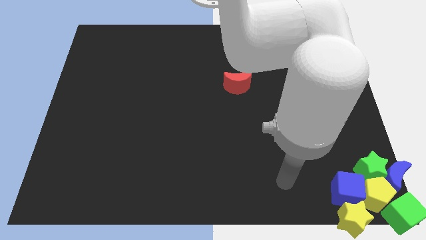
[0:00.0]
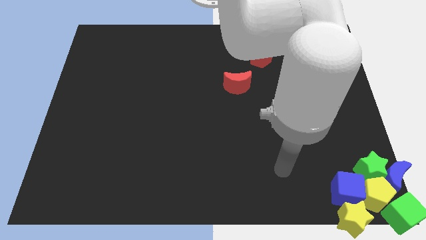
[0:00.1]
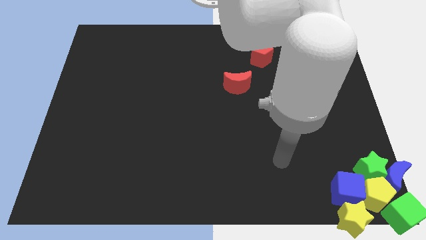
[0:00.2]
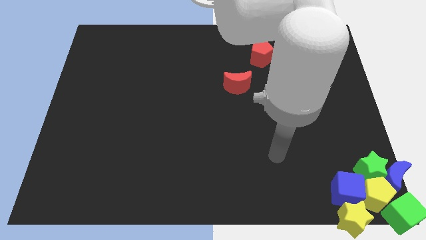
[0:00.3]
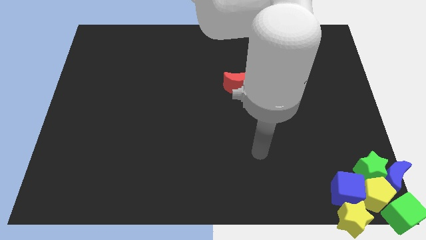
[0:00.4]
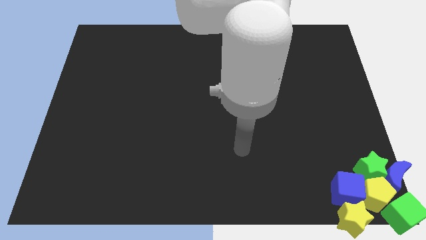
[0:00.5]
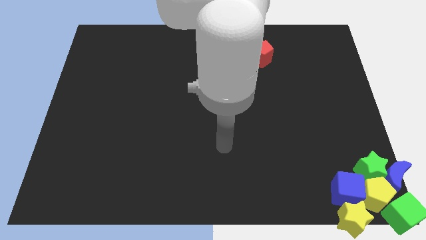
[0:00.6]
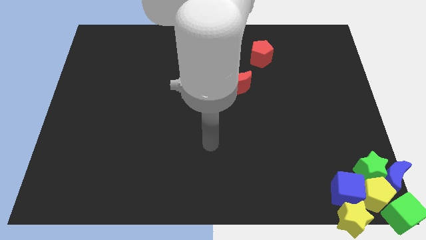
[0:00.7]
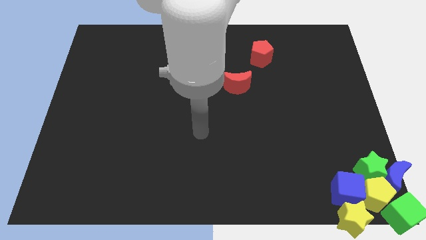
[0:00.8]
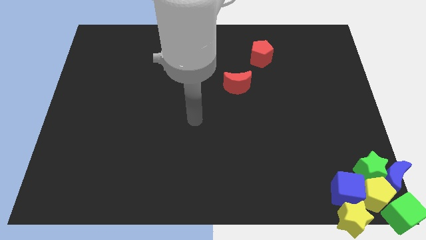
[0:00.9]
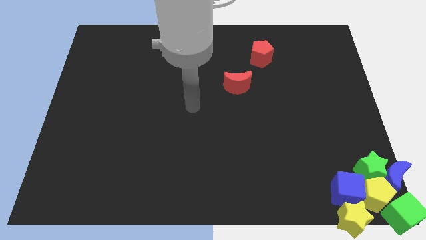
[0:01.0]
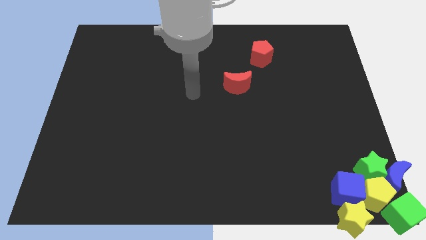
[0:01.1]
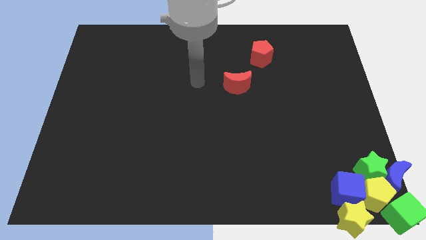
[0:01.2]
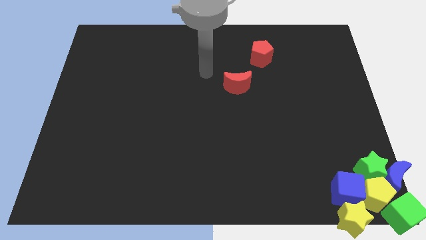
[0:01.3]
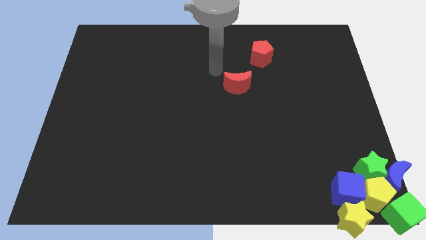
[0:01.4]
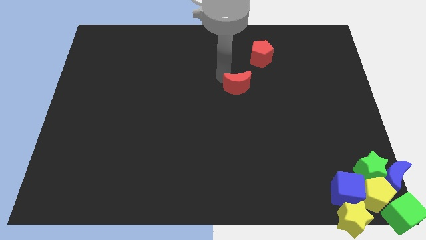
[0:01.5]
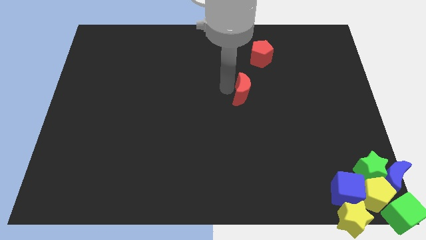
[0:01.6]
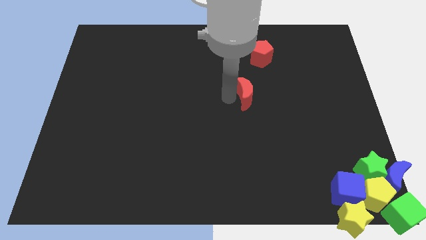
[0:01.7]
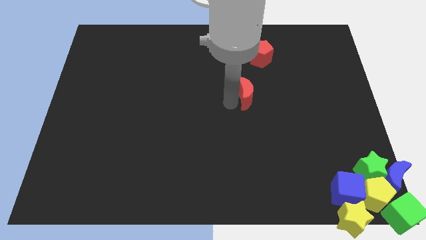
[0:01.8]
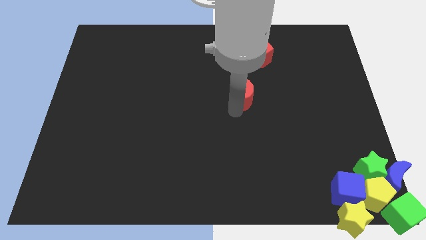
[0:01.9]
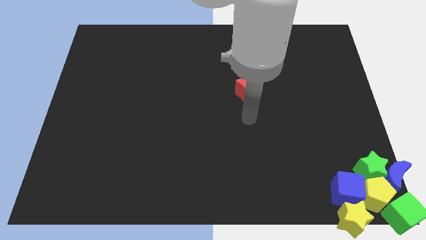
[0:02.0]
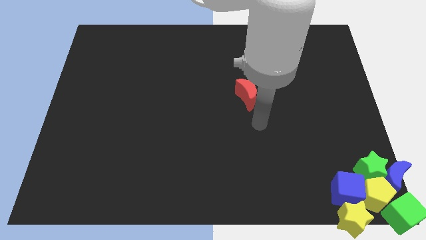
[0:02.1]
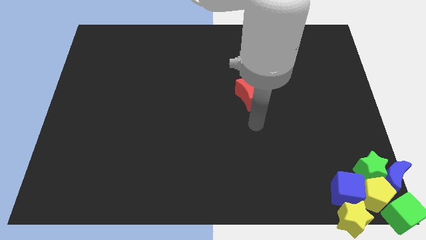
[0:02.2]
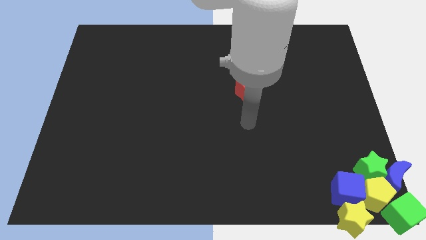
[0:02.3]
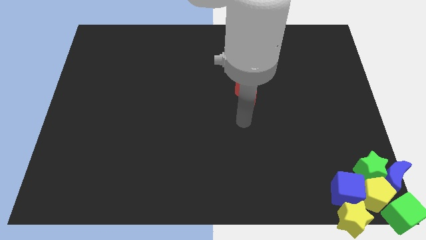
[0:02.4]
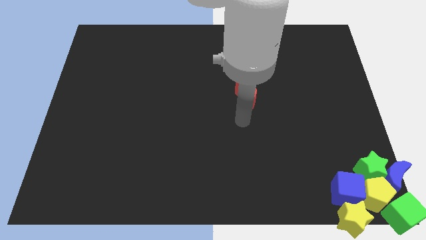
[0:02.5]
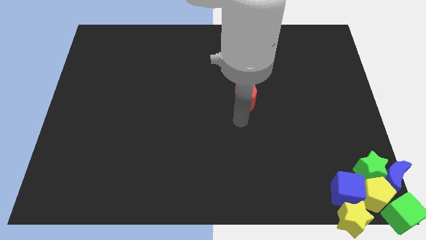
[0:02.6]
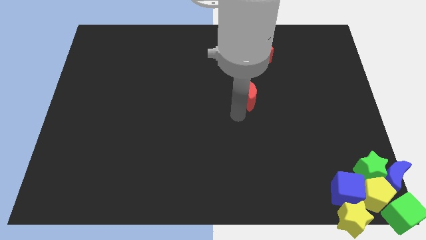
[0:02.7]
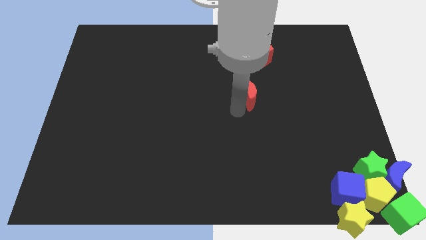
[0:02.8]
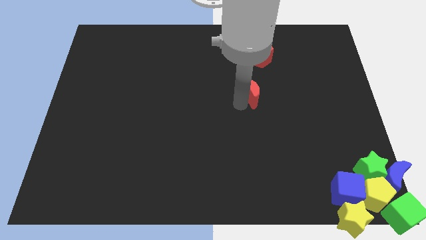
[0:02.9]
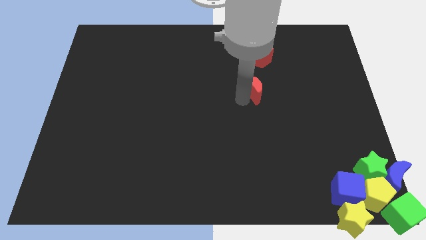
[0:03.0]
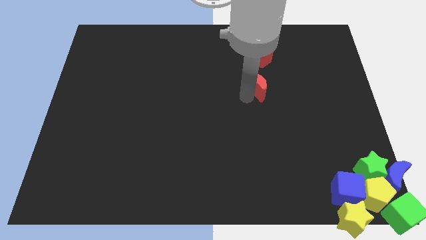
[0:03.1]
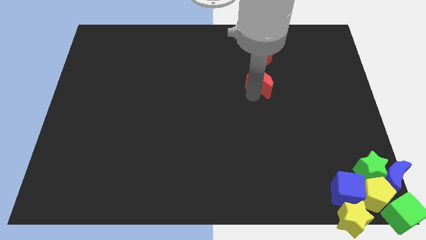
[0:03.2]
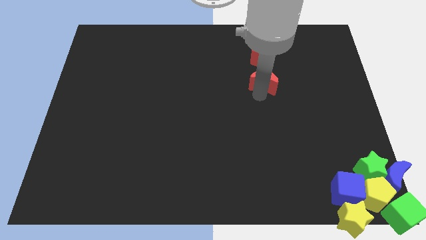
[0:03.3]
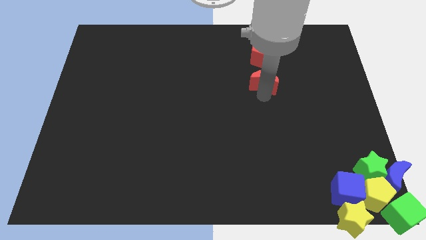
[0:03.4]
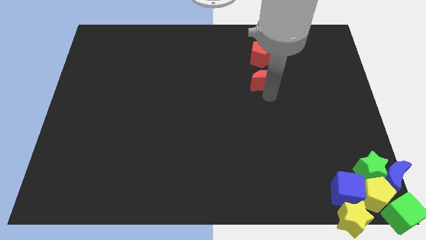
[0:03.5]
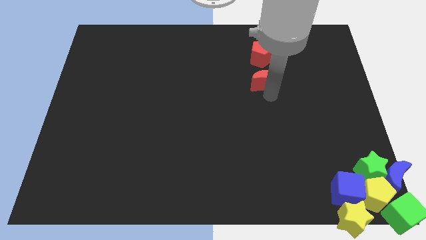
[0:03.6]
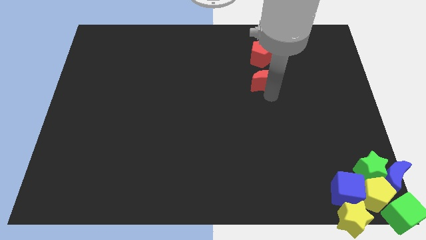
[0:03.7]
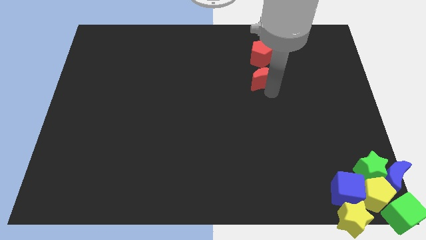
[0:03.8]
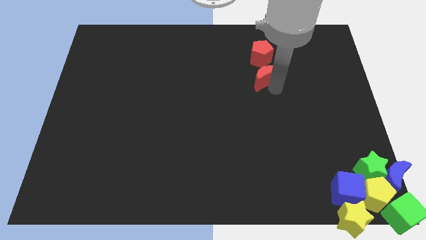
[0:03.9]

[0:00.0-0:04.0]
place the red crescent below the red pentagon

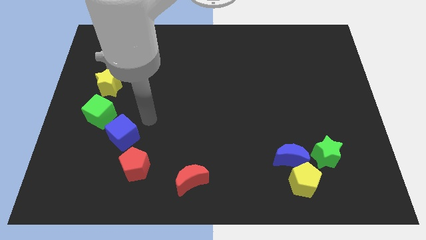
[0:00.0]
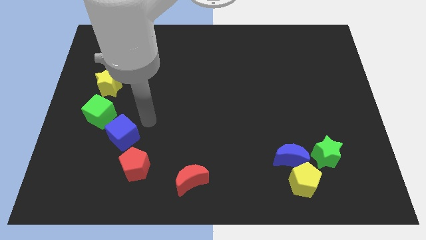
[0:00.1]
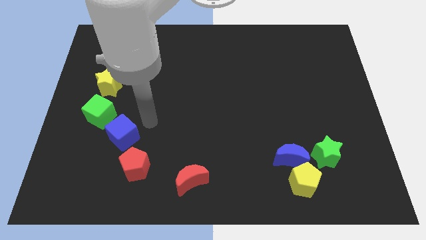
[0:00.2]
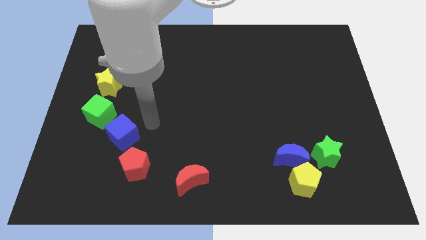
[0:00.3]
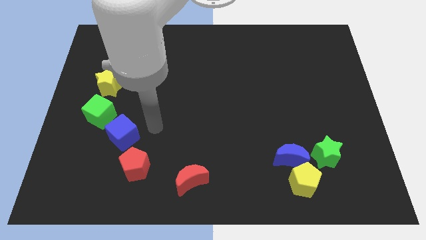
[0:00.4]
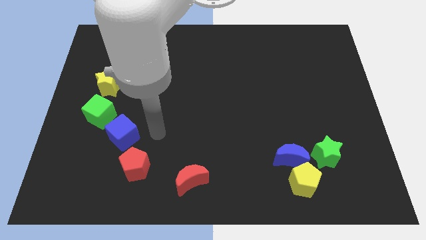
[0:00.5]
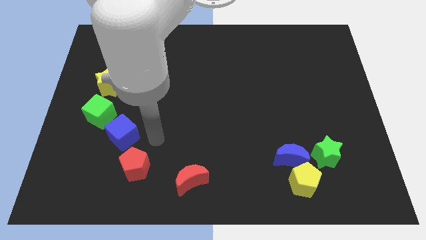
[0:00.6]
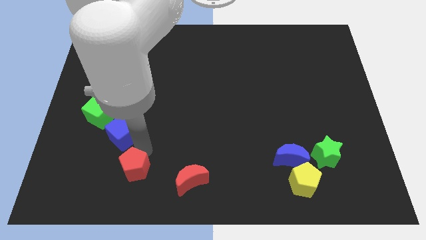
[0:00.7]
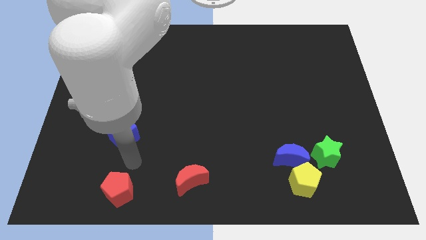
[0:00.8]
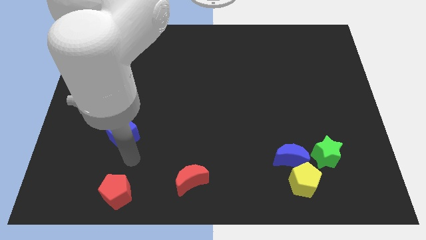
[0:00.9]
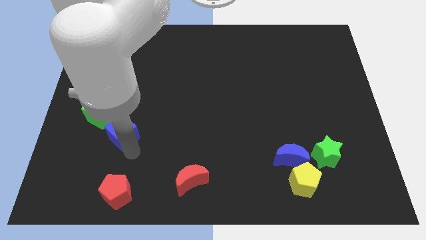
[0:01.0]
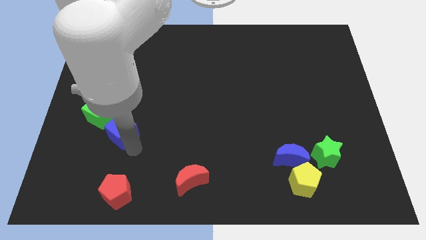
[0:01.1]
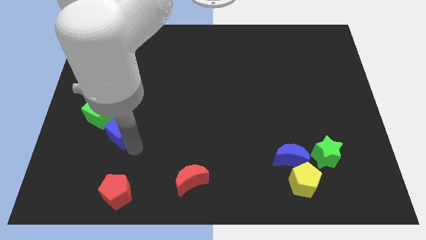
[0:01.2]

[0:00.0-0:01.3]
push the red pentagon towards the bottom of the board

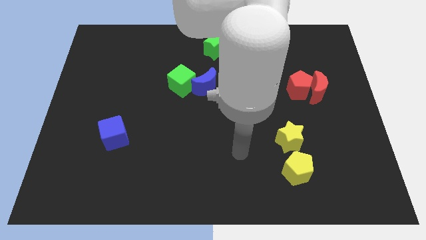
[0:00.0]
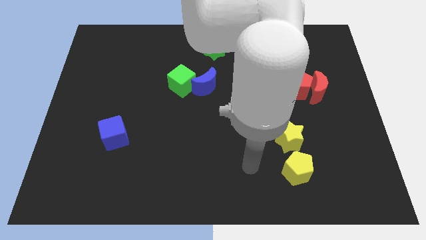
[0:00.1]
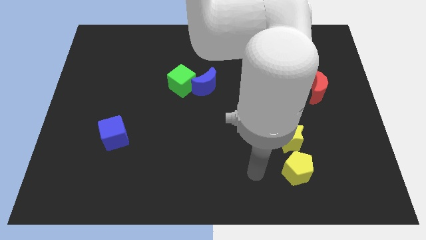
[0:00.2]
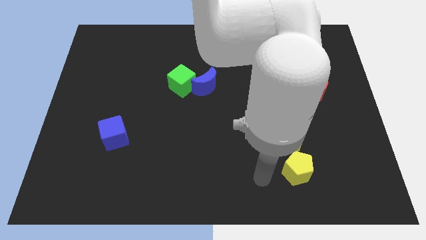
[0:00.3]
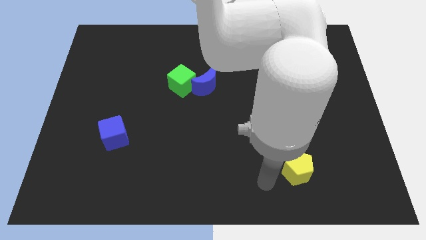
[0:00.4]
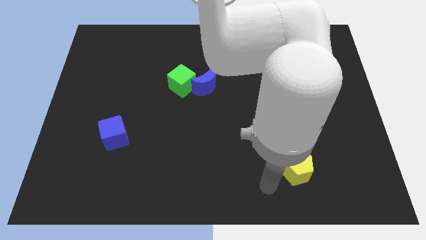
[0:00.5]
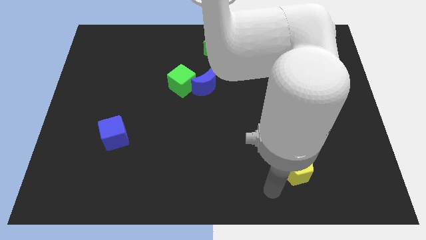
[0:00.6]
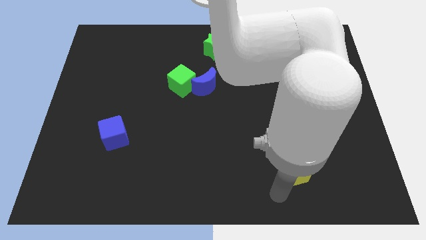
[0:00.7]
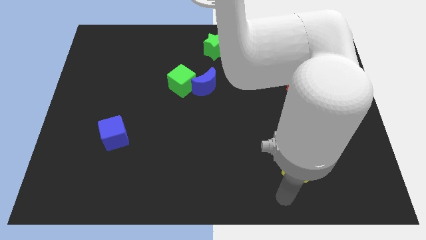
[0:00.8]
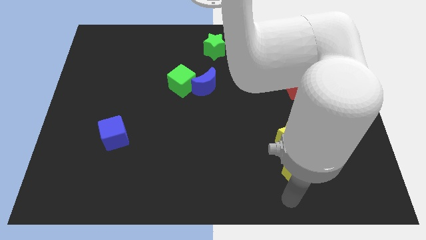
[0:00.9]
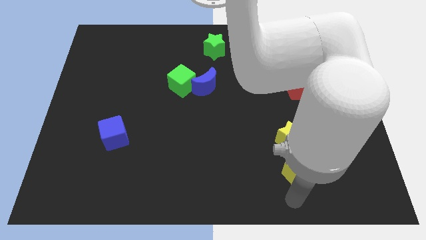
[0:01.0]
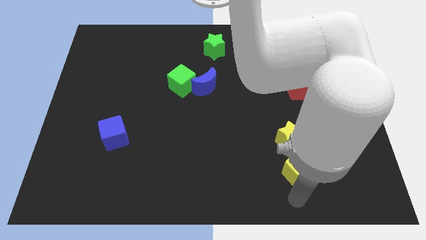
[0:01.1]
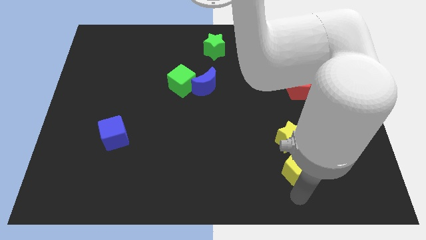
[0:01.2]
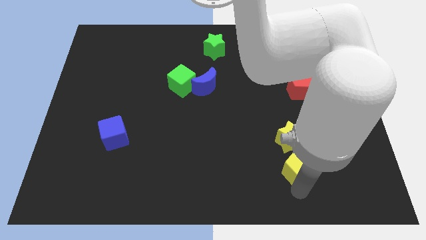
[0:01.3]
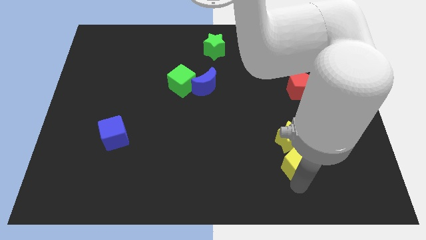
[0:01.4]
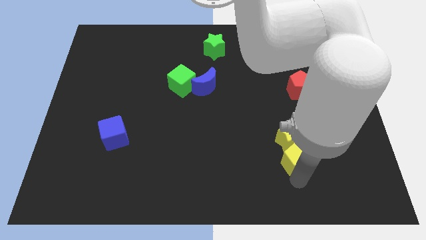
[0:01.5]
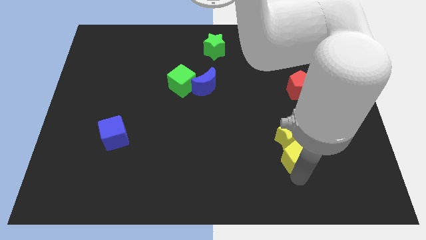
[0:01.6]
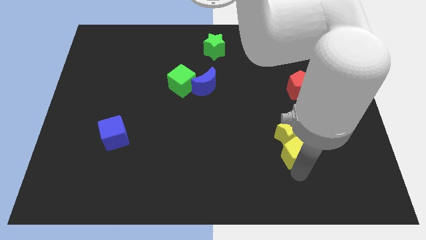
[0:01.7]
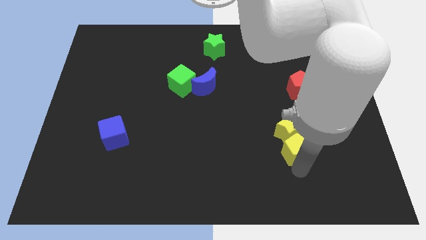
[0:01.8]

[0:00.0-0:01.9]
push the yellow pentagon into the yellow star

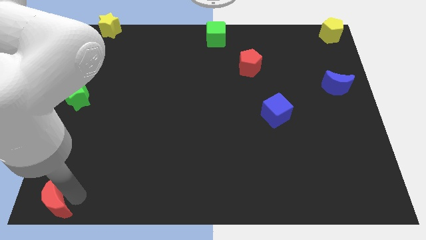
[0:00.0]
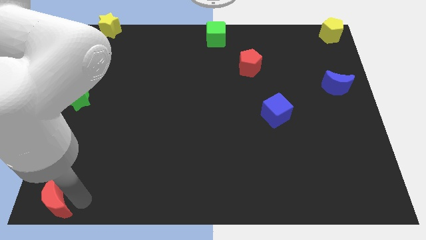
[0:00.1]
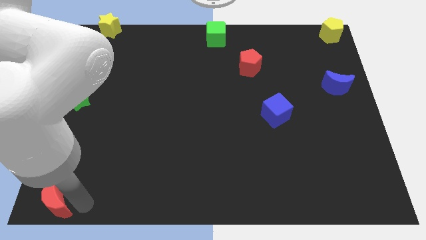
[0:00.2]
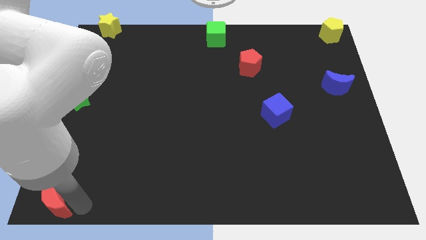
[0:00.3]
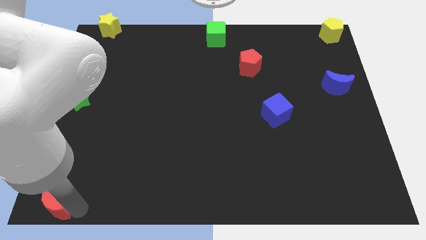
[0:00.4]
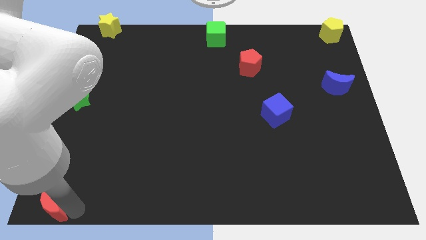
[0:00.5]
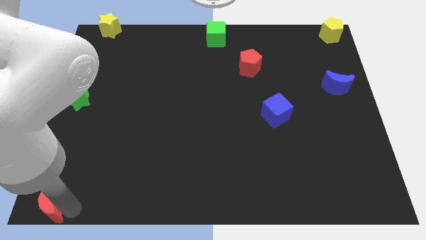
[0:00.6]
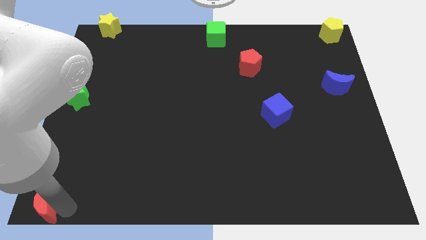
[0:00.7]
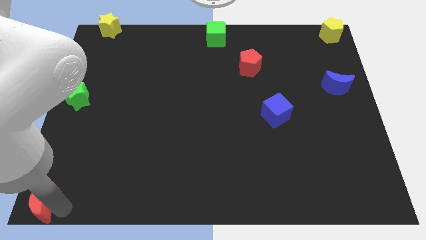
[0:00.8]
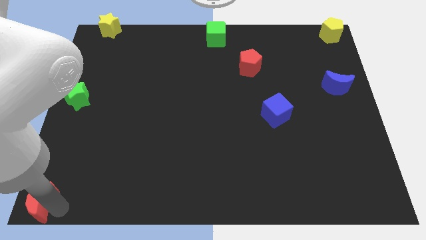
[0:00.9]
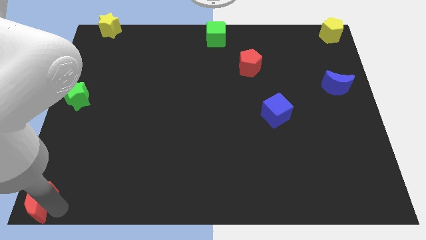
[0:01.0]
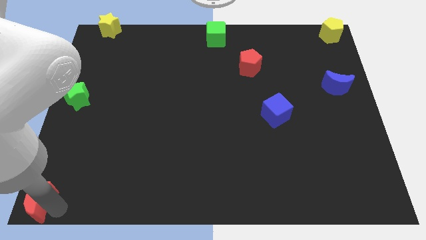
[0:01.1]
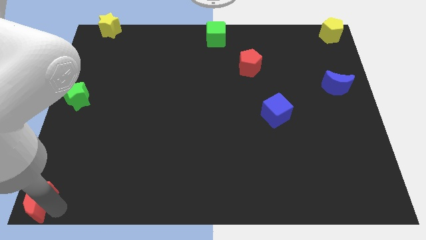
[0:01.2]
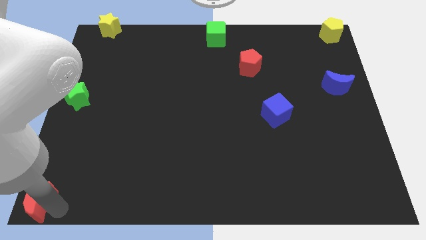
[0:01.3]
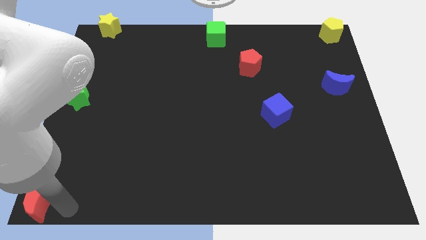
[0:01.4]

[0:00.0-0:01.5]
move the red moon towards the bottom left side of the board

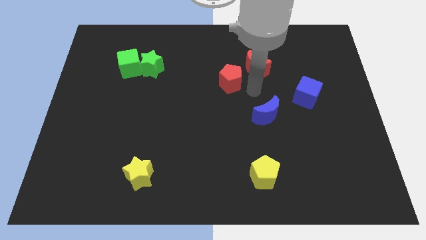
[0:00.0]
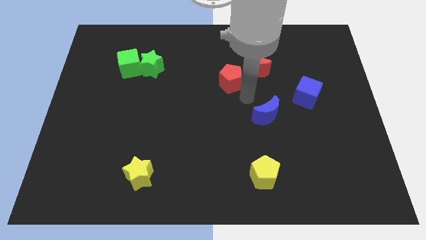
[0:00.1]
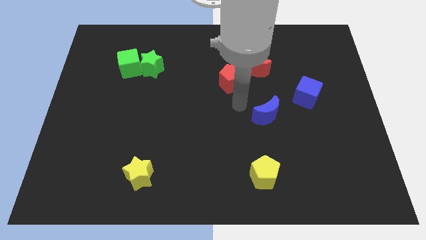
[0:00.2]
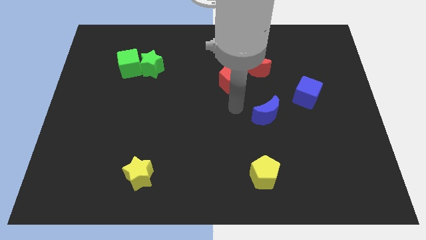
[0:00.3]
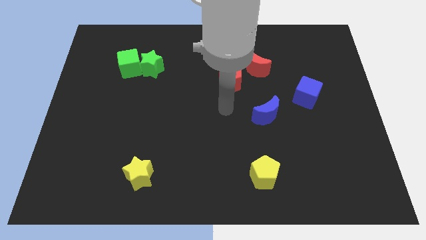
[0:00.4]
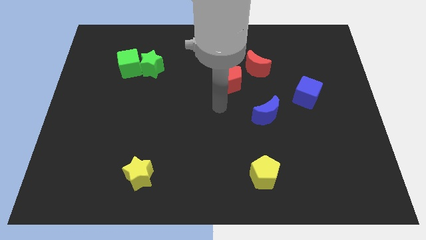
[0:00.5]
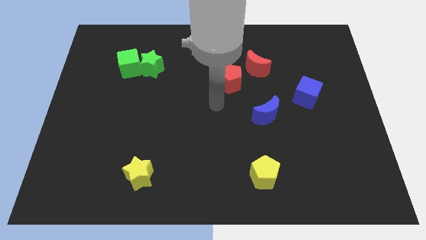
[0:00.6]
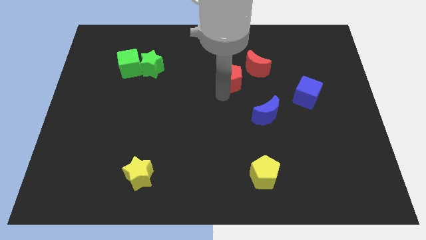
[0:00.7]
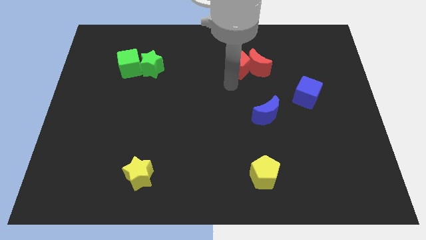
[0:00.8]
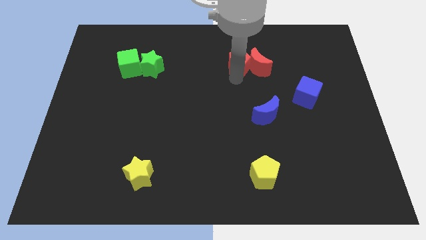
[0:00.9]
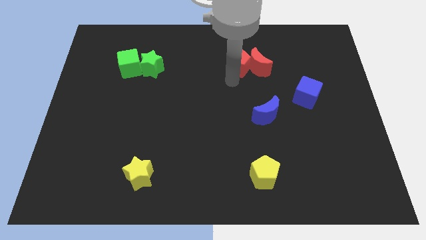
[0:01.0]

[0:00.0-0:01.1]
push the red pentagon towards the red crescent
